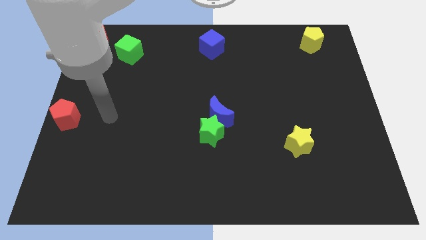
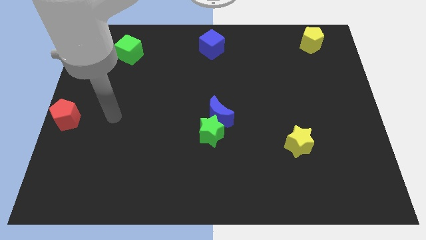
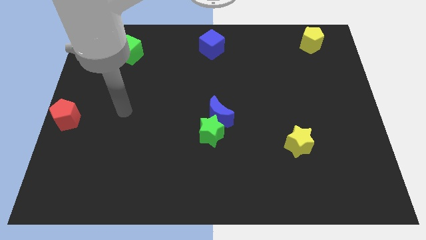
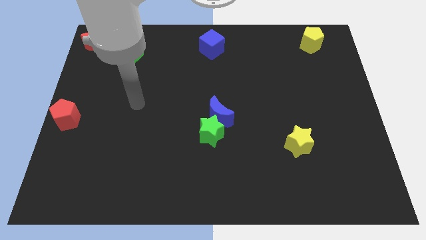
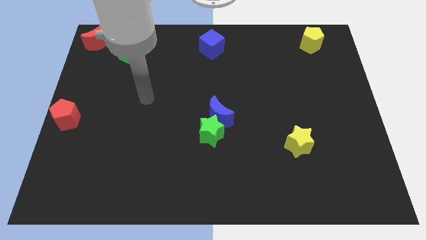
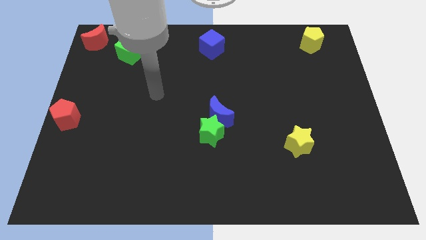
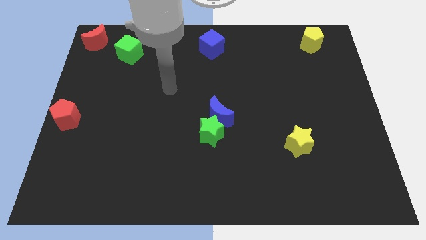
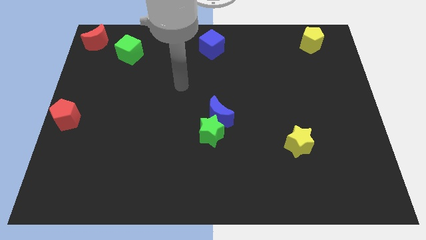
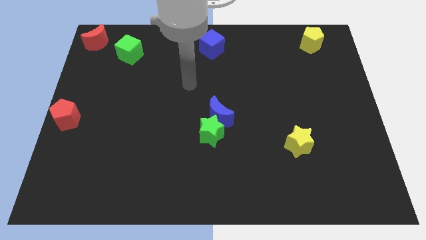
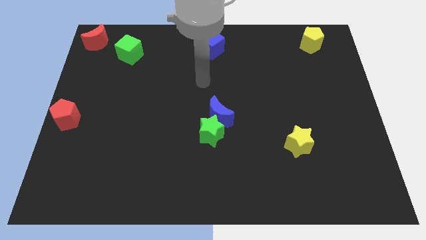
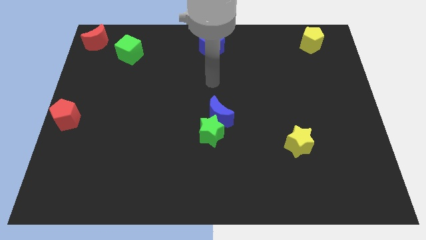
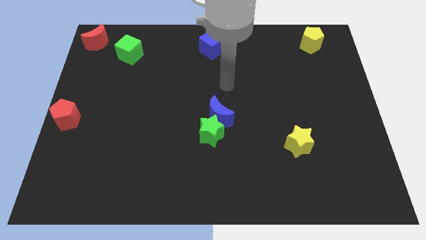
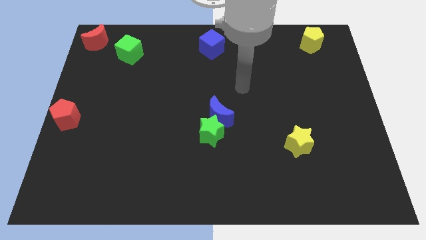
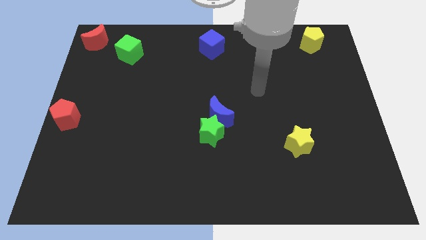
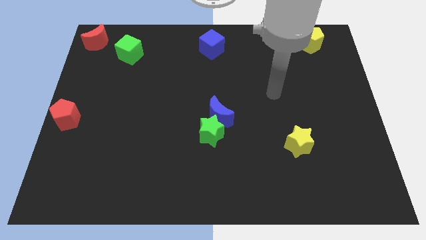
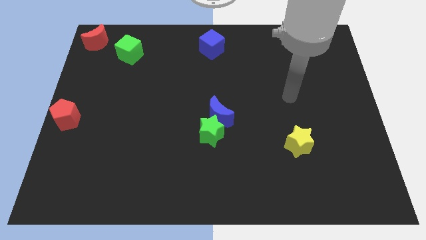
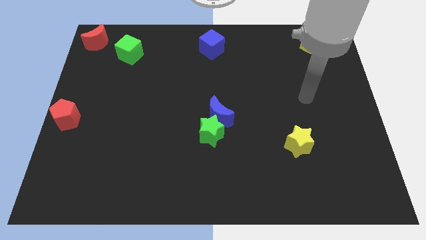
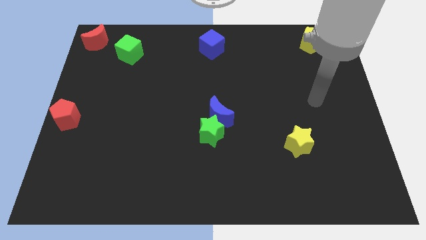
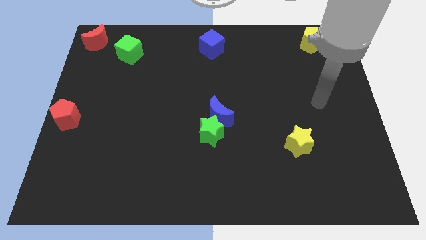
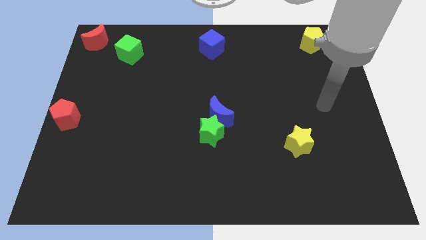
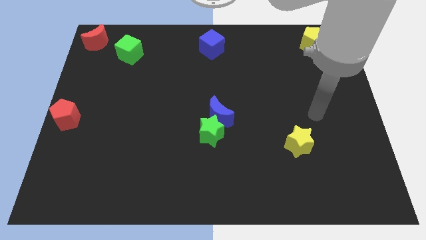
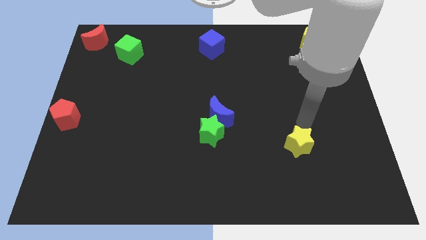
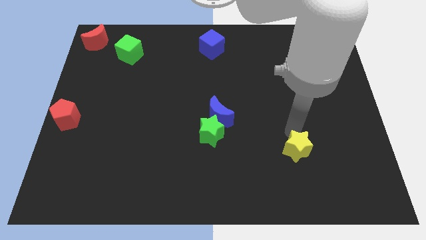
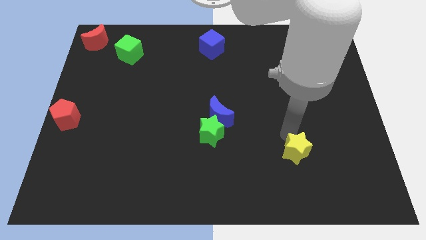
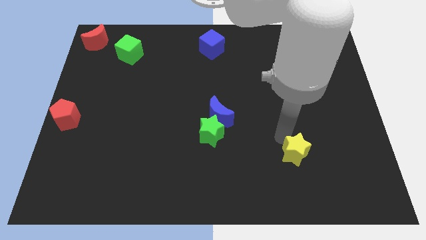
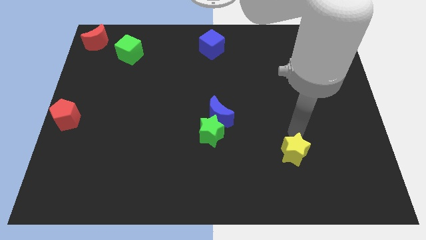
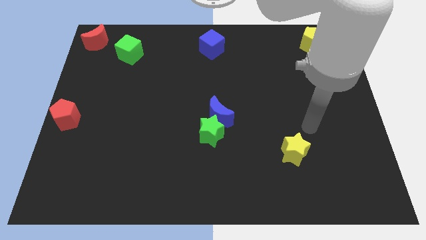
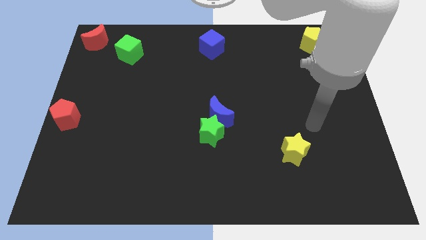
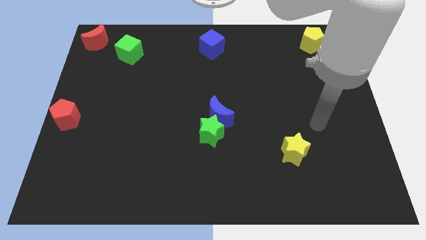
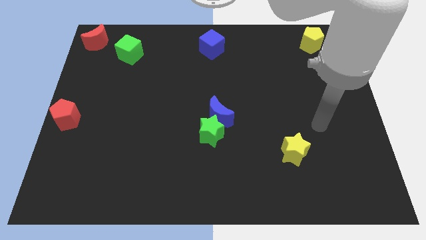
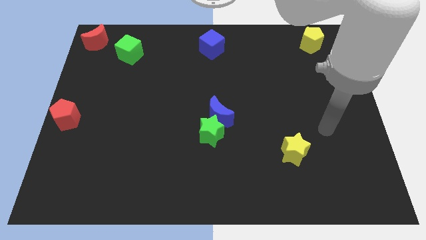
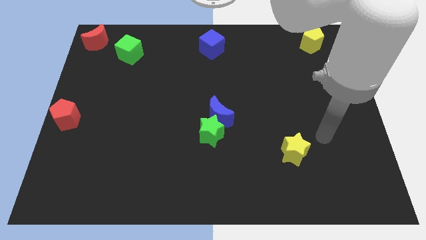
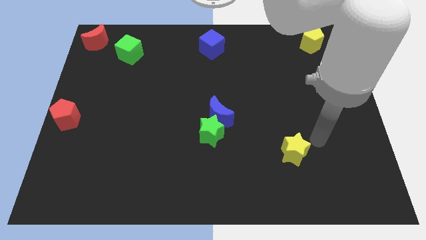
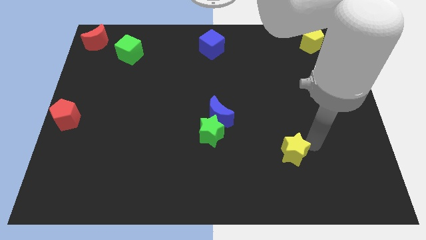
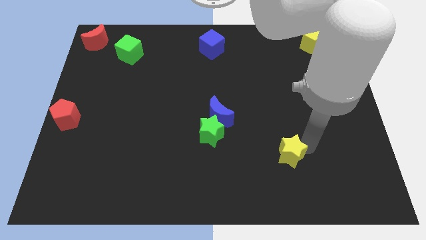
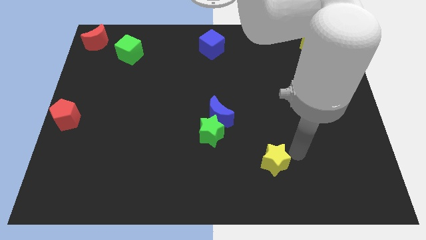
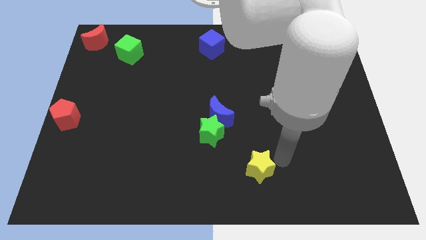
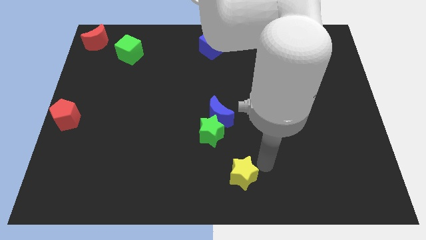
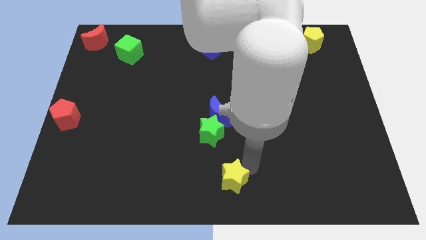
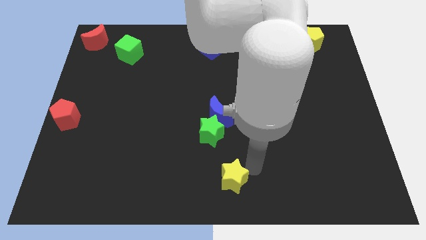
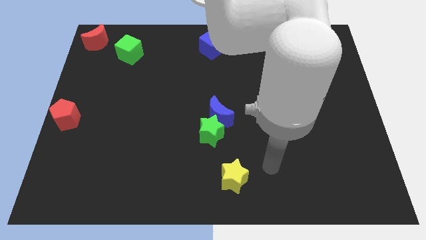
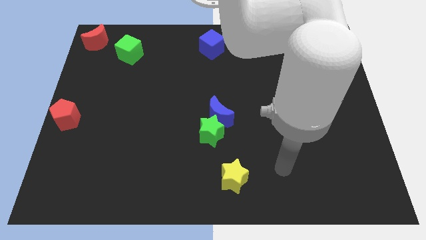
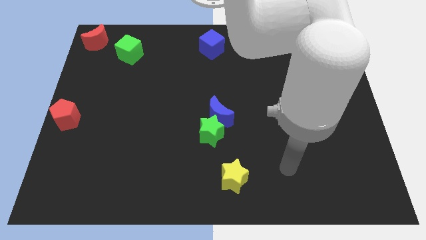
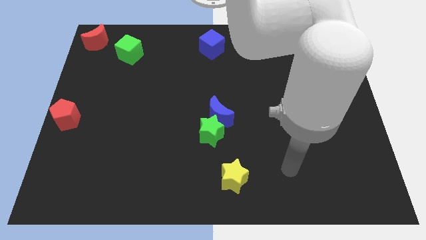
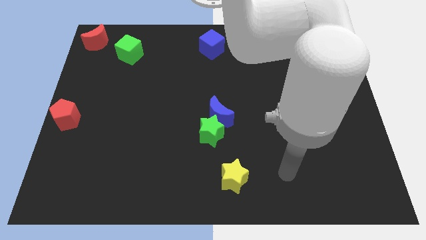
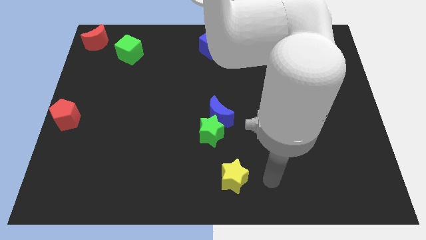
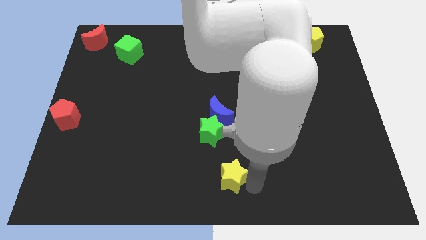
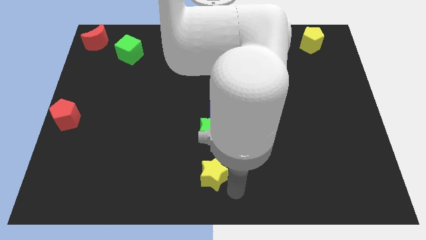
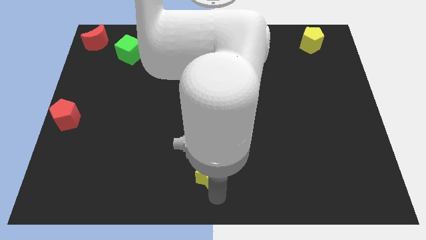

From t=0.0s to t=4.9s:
place the yellow star at the bottom center of the board

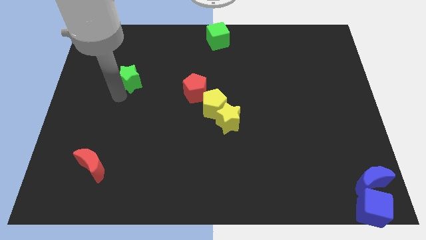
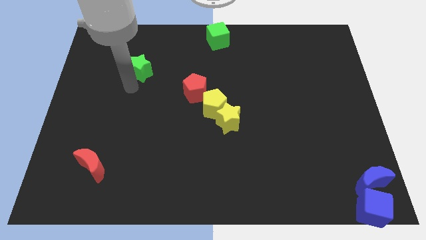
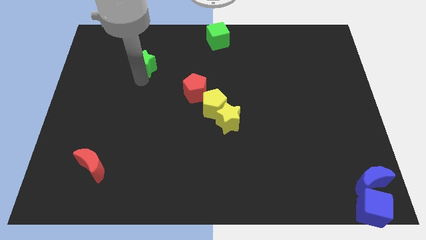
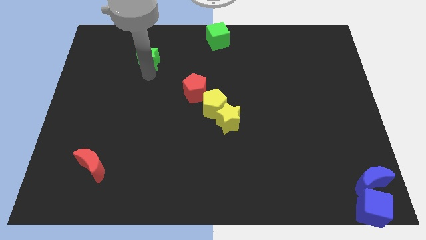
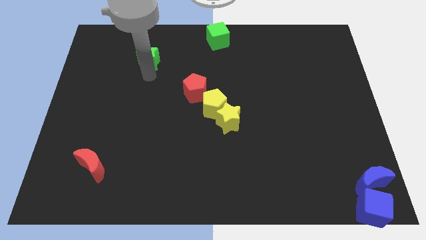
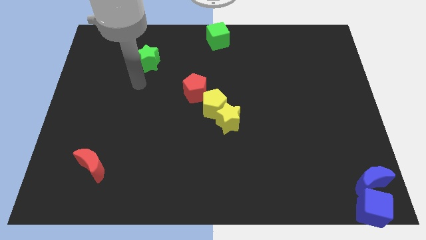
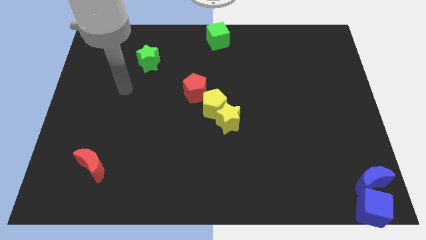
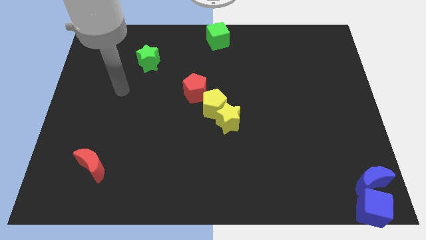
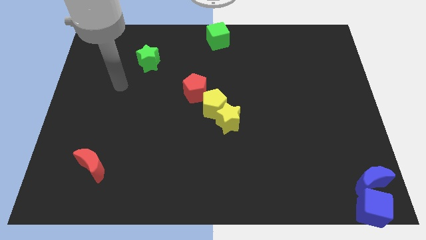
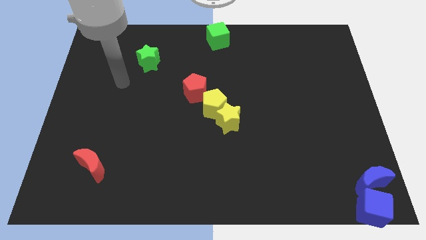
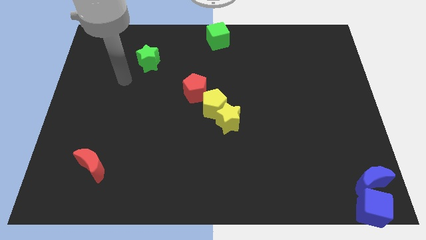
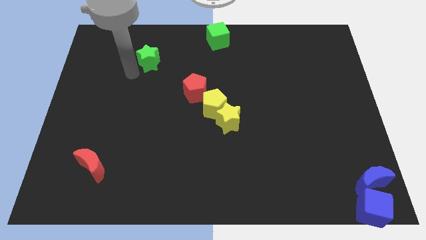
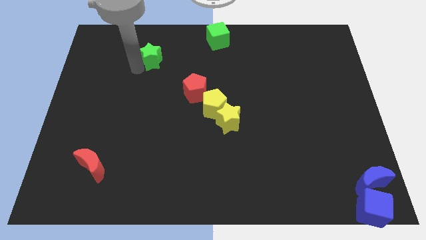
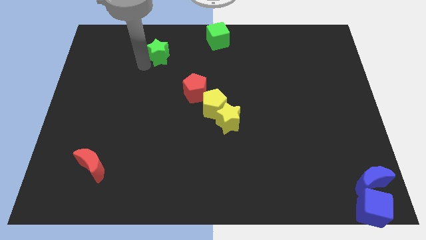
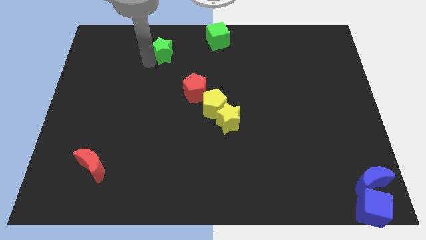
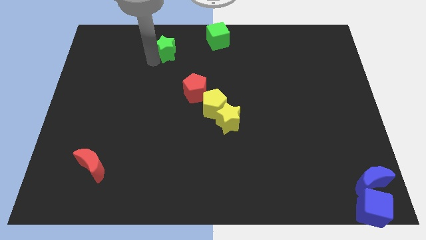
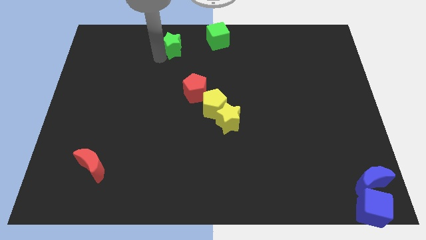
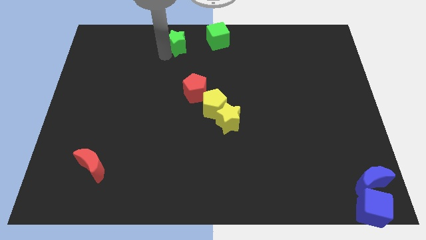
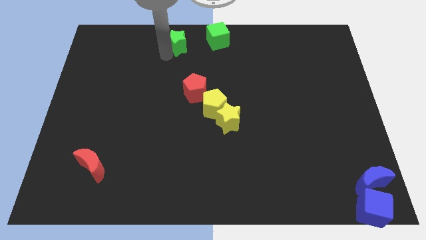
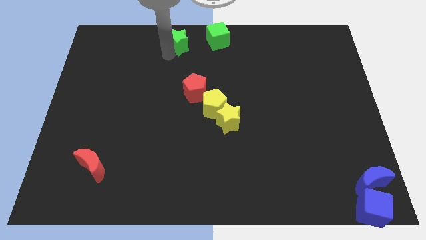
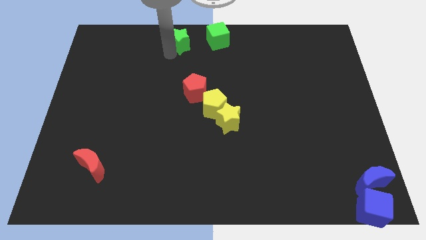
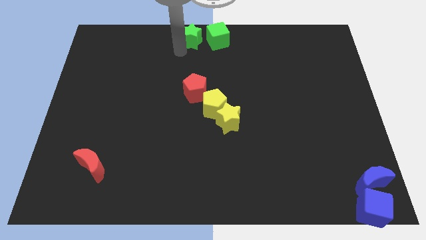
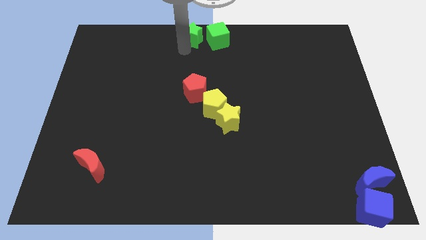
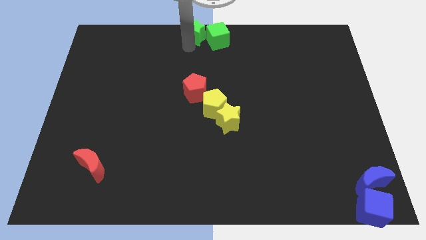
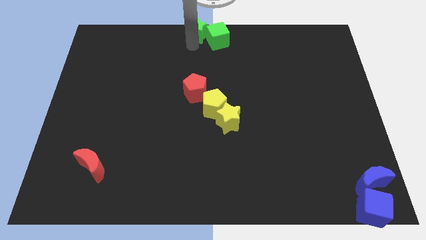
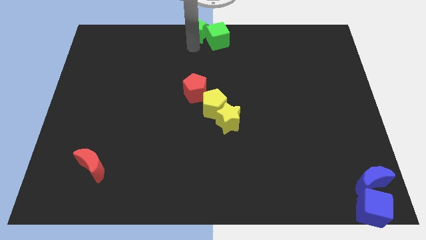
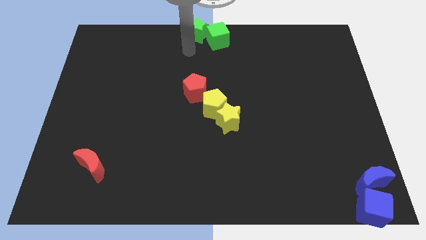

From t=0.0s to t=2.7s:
move the green star left to the green cube

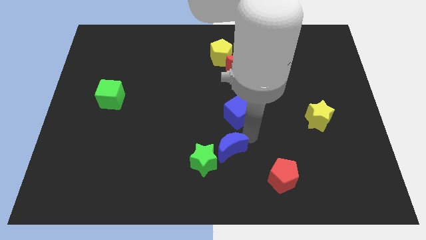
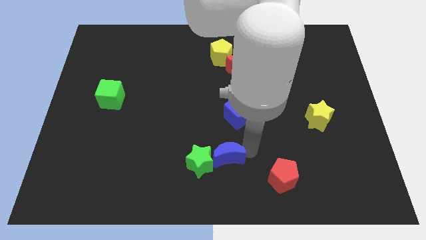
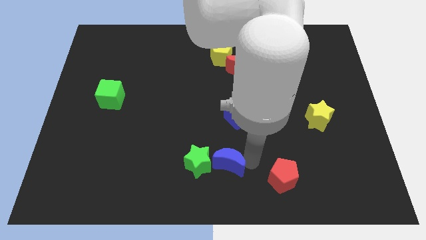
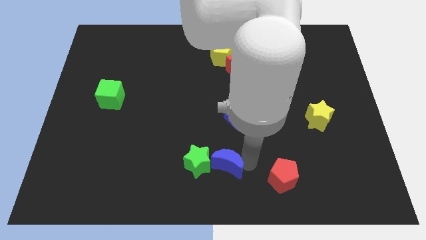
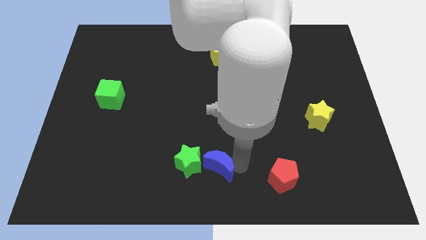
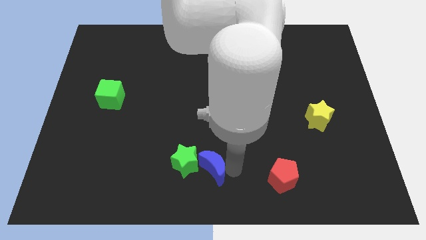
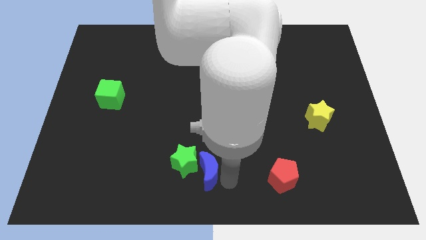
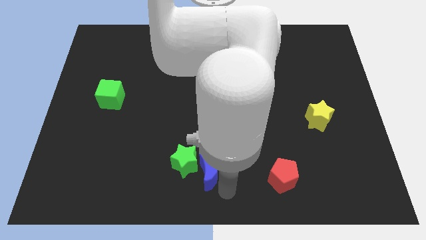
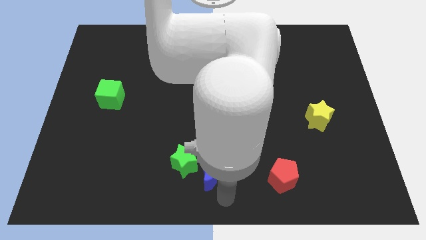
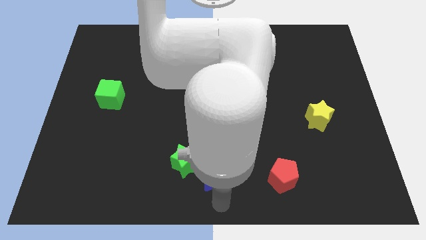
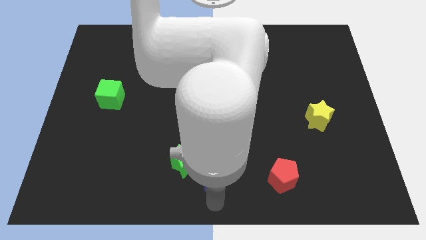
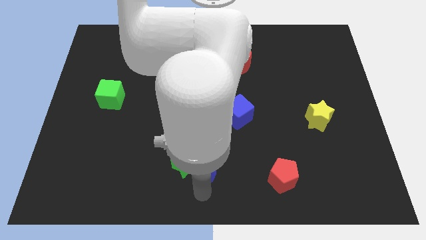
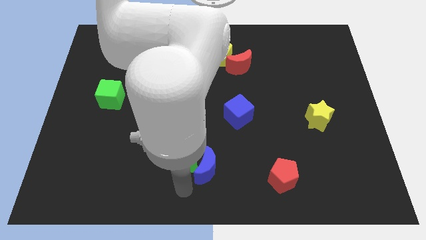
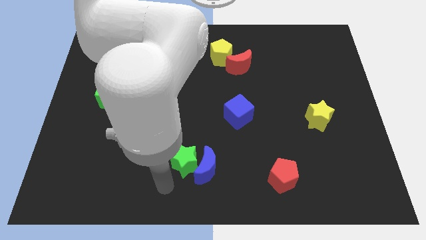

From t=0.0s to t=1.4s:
move the blue crescent to the right side of the green star

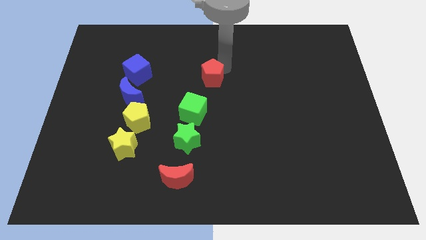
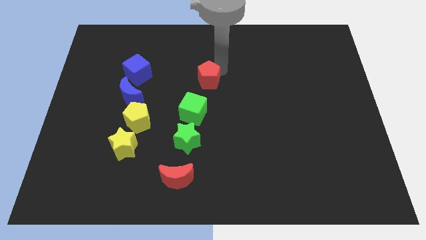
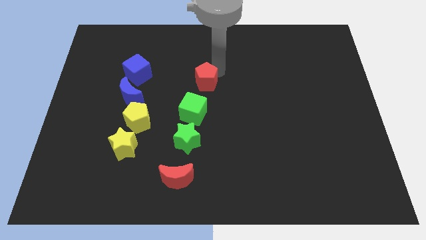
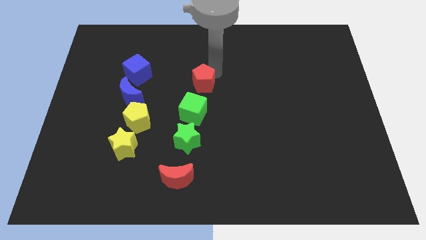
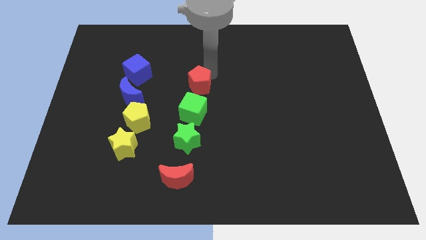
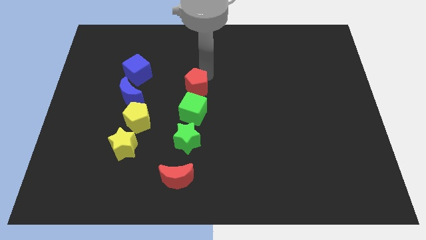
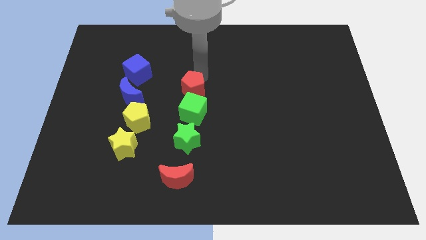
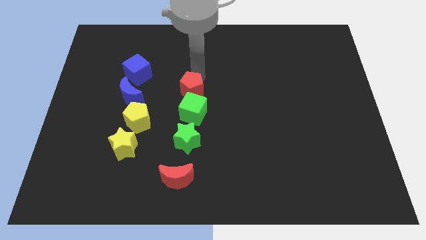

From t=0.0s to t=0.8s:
place the red pentagon above the green cube
